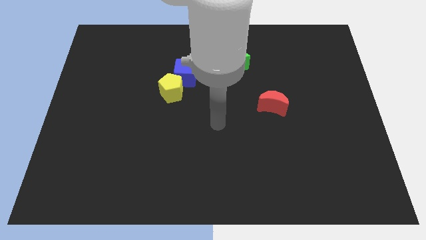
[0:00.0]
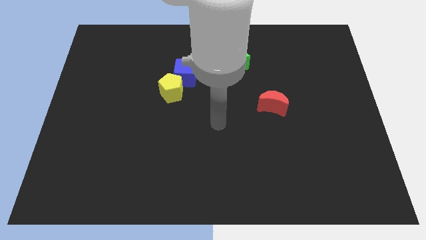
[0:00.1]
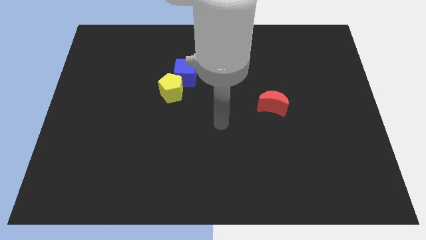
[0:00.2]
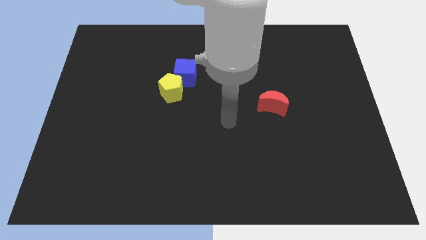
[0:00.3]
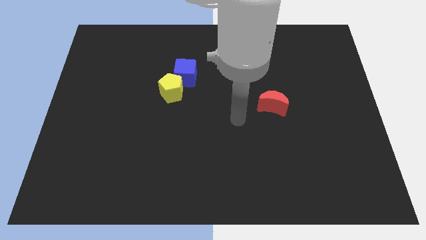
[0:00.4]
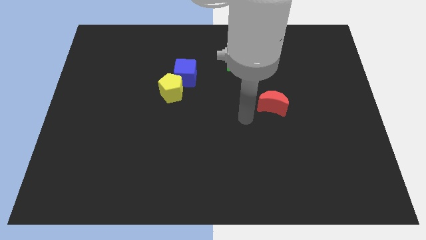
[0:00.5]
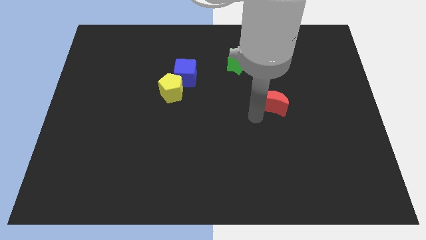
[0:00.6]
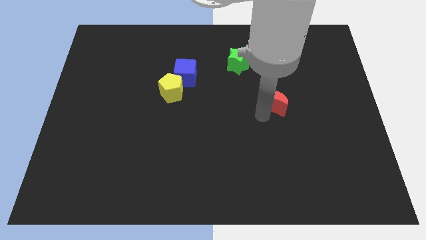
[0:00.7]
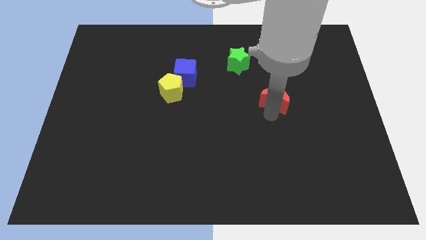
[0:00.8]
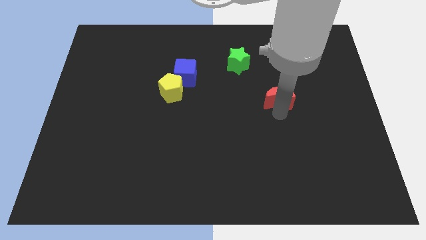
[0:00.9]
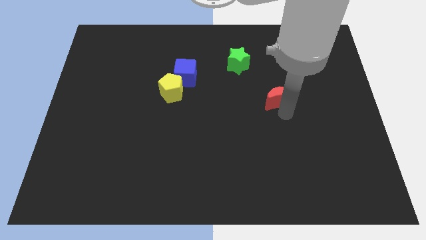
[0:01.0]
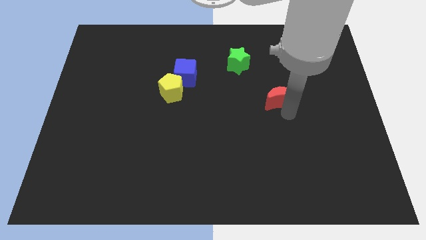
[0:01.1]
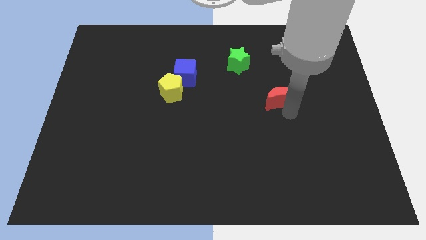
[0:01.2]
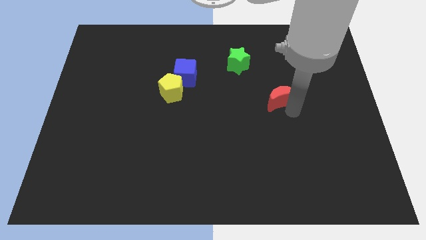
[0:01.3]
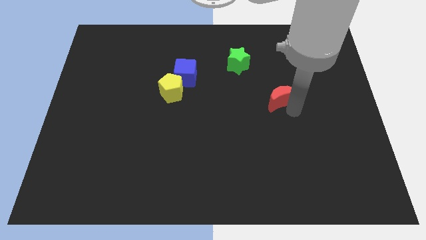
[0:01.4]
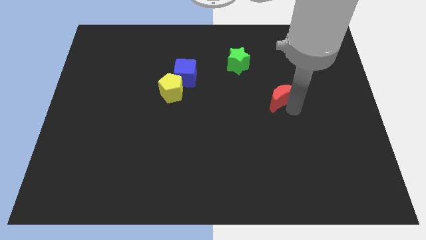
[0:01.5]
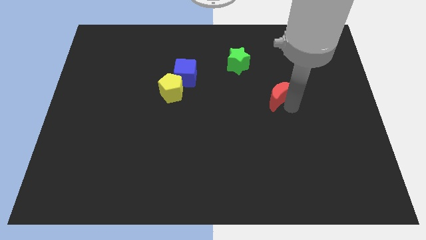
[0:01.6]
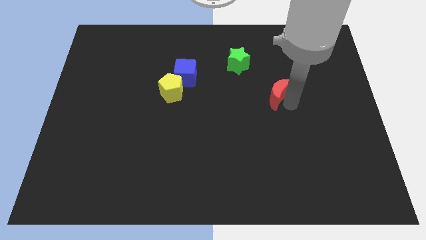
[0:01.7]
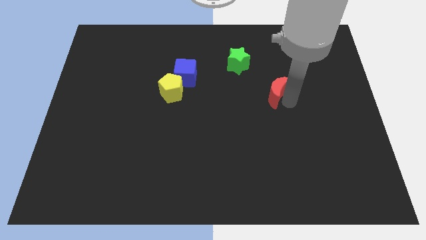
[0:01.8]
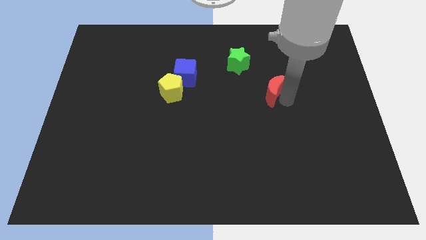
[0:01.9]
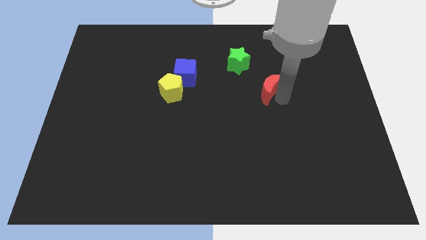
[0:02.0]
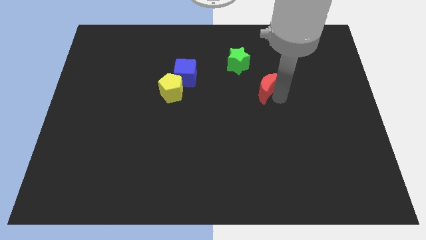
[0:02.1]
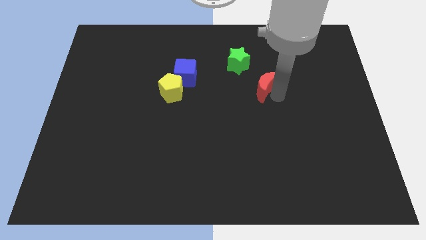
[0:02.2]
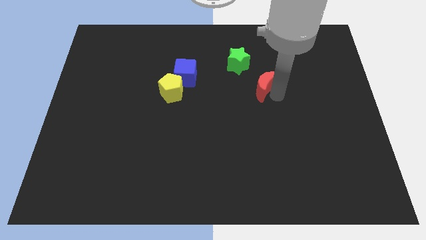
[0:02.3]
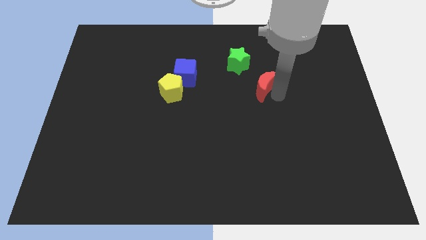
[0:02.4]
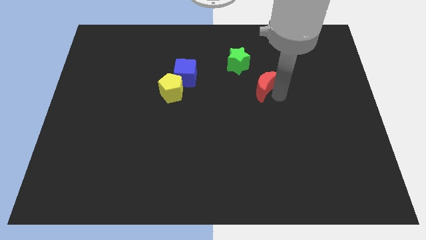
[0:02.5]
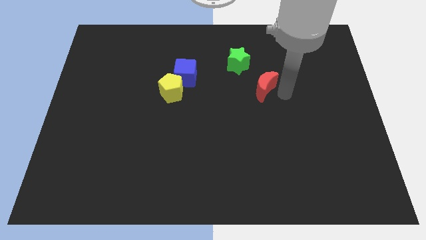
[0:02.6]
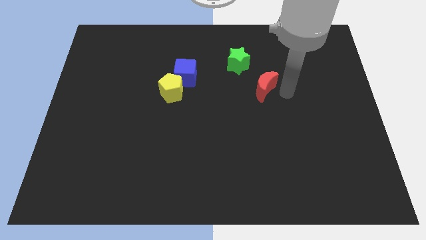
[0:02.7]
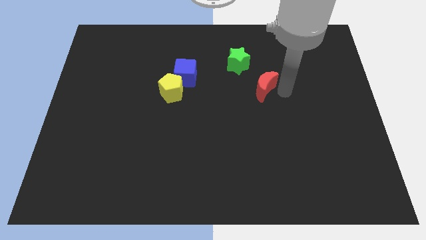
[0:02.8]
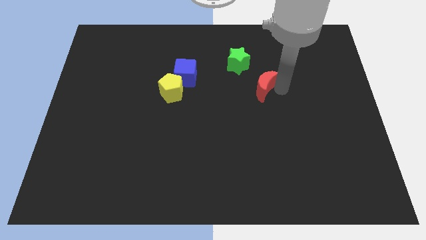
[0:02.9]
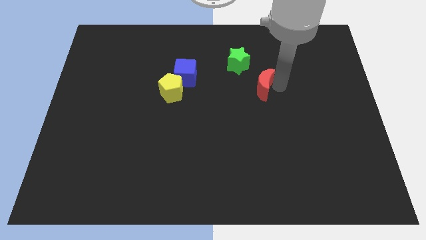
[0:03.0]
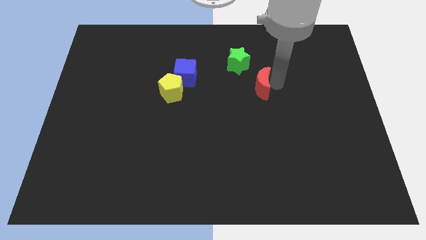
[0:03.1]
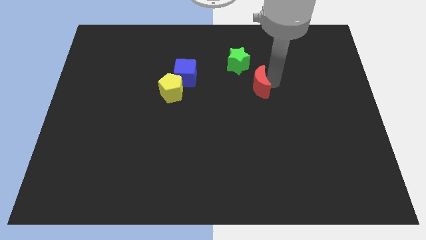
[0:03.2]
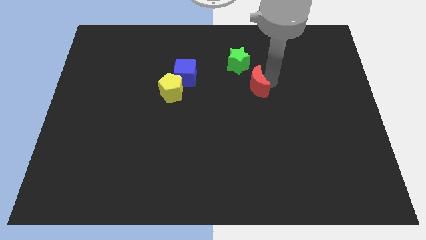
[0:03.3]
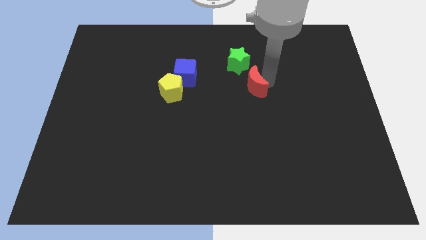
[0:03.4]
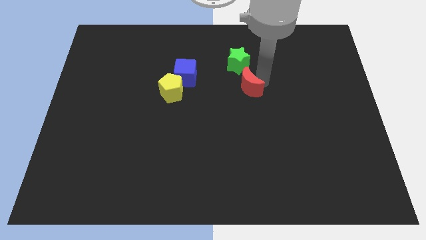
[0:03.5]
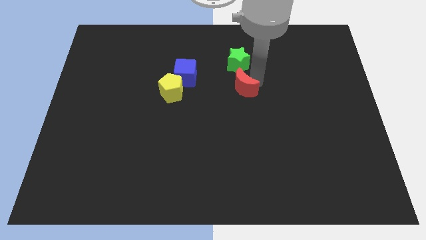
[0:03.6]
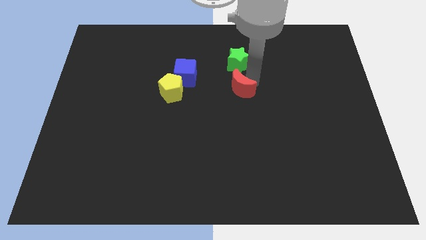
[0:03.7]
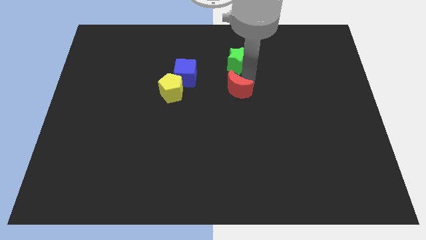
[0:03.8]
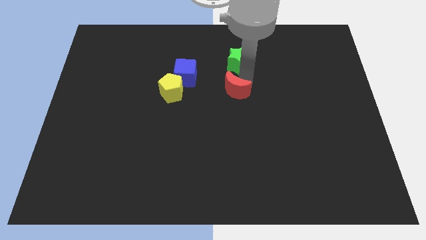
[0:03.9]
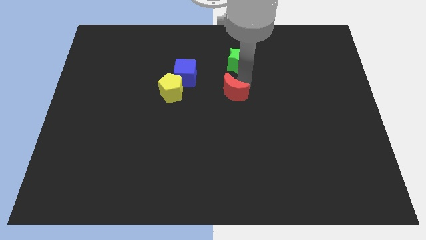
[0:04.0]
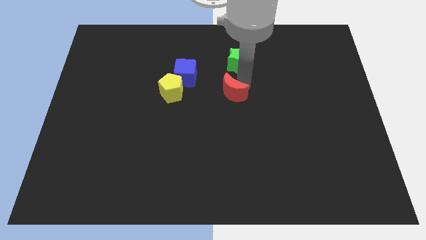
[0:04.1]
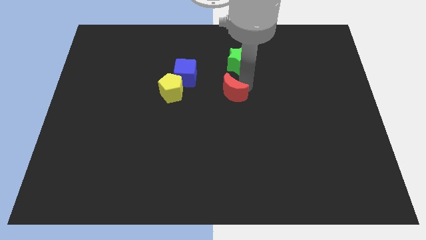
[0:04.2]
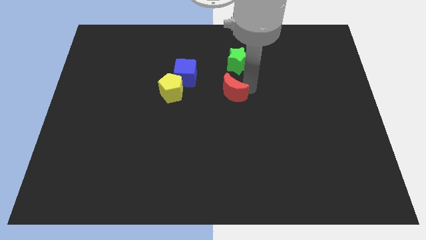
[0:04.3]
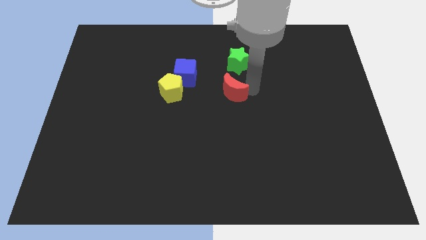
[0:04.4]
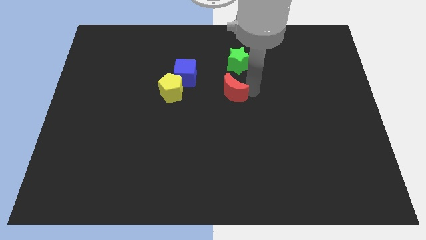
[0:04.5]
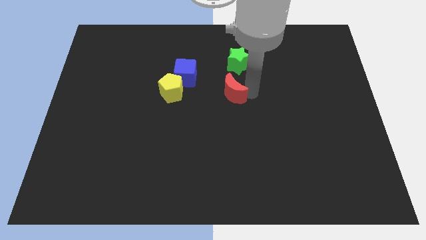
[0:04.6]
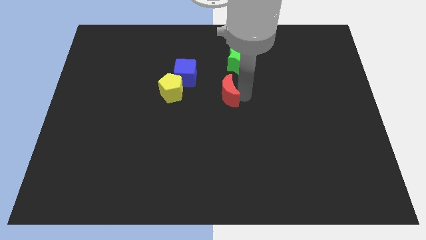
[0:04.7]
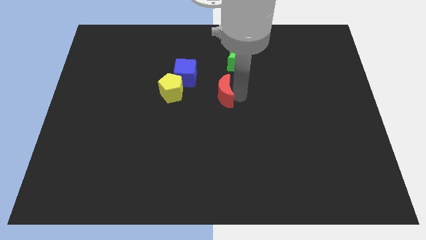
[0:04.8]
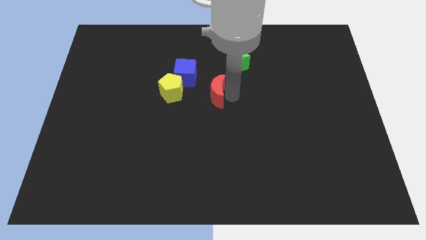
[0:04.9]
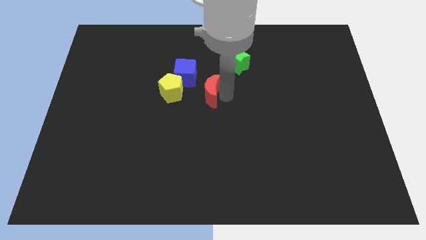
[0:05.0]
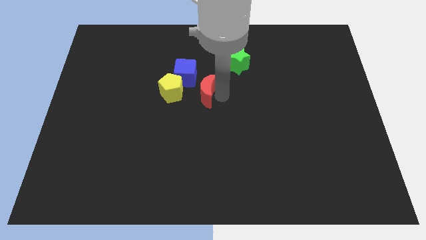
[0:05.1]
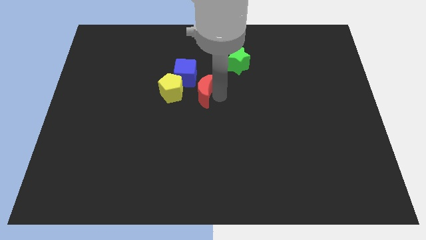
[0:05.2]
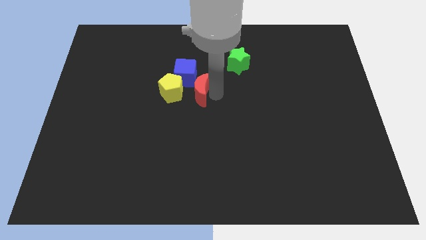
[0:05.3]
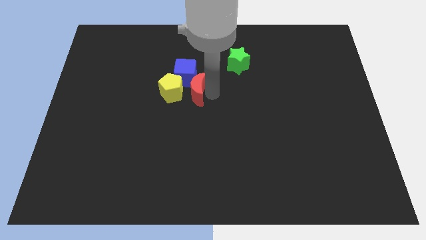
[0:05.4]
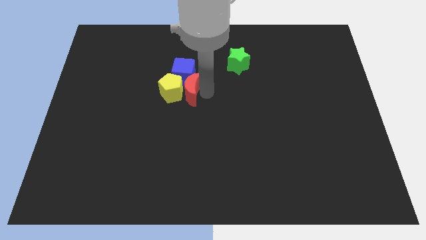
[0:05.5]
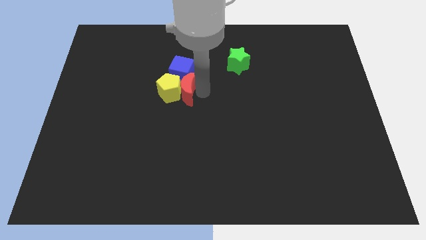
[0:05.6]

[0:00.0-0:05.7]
put the red block close to the yellow pentagon

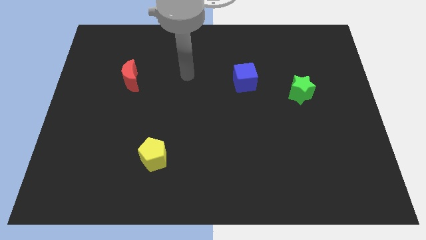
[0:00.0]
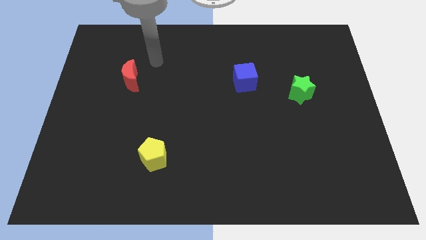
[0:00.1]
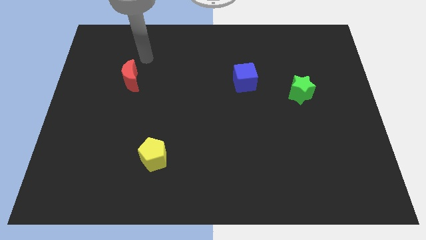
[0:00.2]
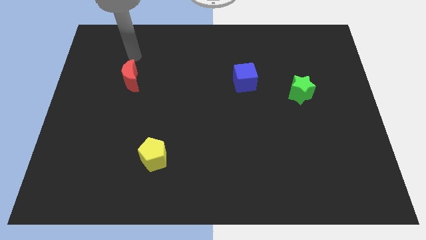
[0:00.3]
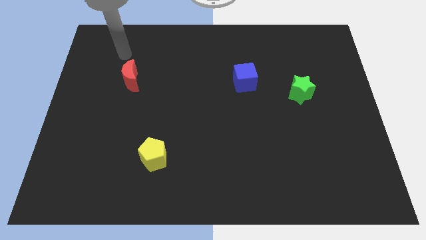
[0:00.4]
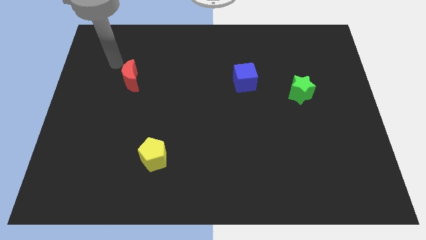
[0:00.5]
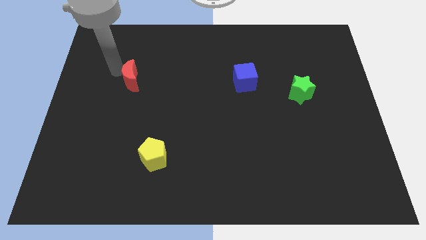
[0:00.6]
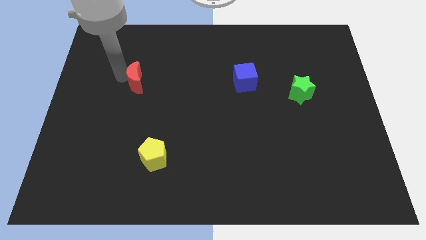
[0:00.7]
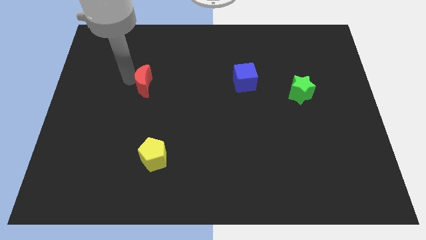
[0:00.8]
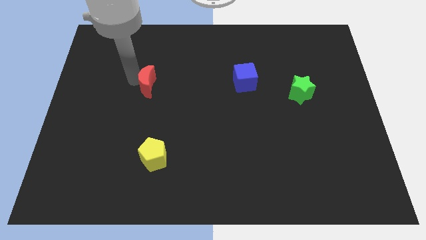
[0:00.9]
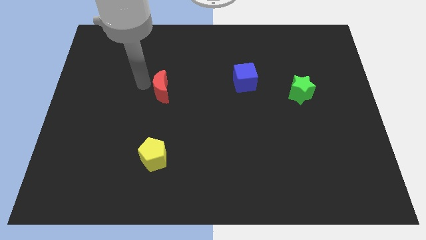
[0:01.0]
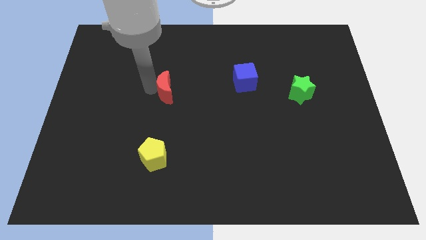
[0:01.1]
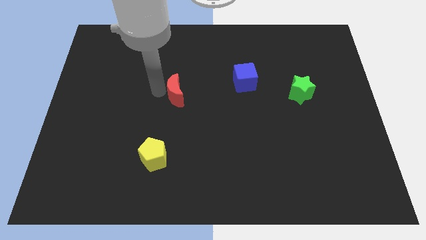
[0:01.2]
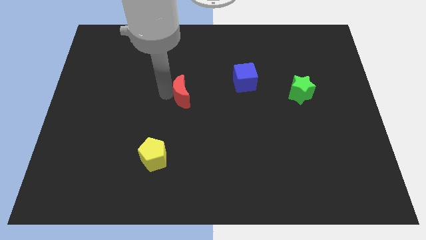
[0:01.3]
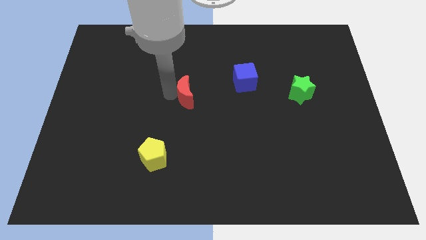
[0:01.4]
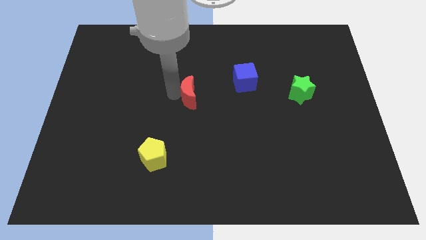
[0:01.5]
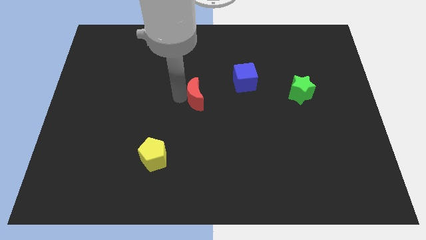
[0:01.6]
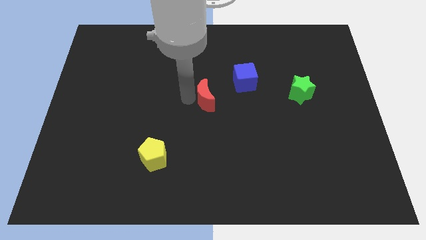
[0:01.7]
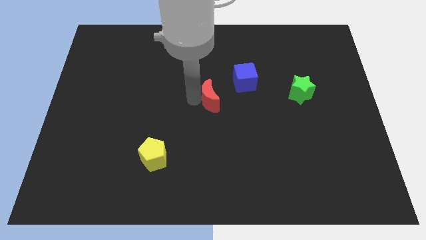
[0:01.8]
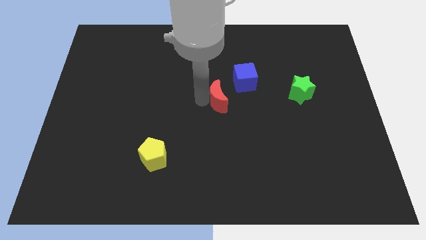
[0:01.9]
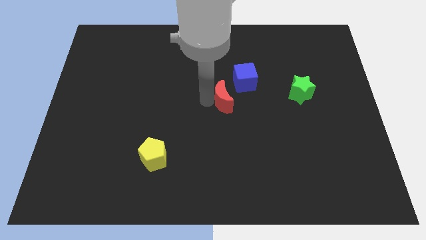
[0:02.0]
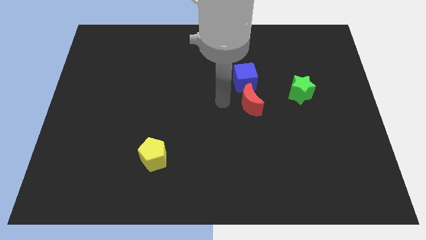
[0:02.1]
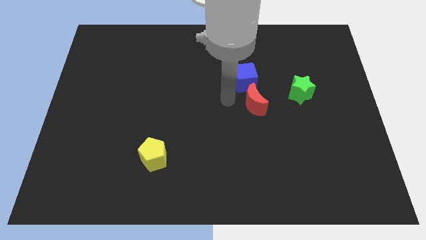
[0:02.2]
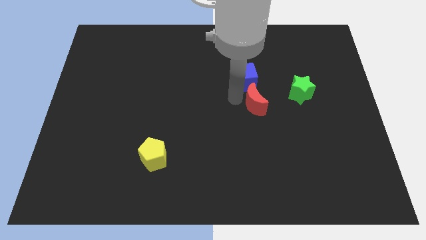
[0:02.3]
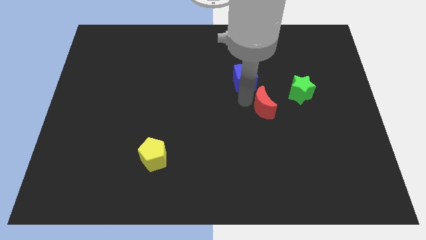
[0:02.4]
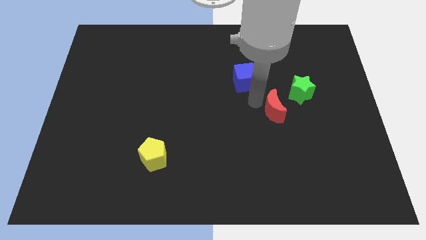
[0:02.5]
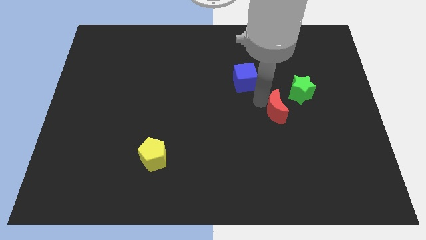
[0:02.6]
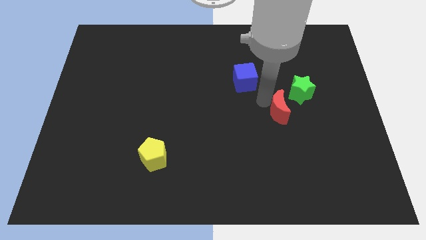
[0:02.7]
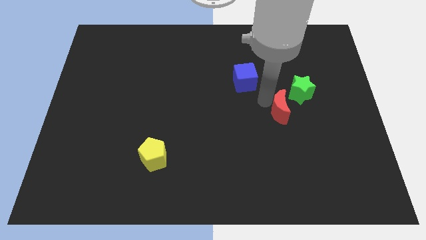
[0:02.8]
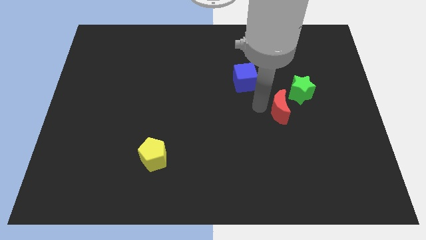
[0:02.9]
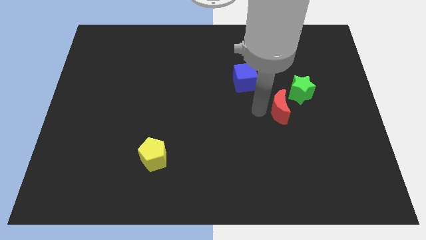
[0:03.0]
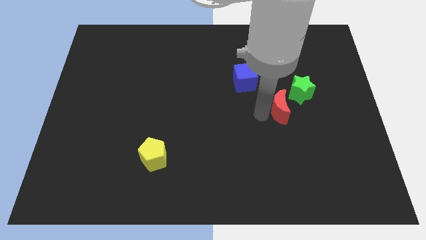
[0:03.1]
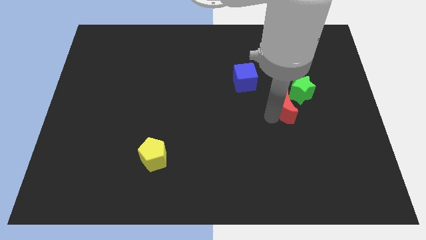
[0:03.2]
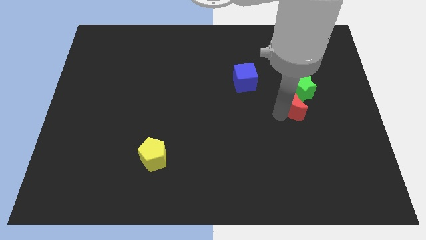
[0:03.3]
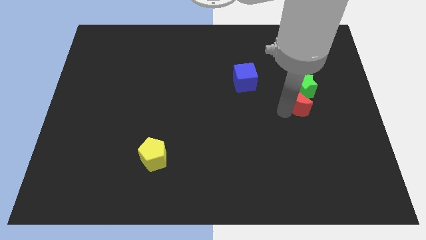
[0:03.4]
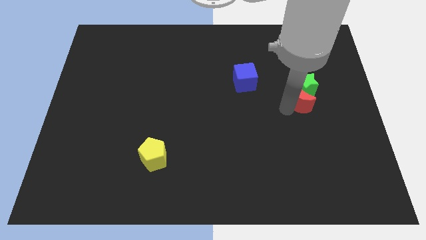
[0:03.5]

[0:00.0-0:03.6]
put the red moon close to the green block
